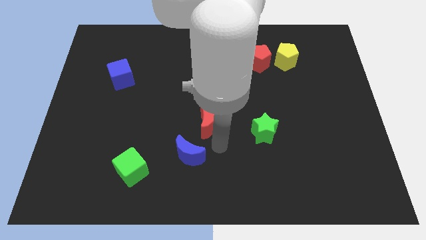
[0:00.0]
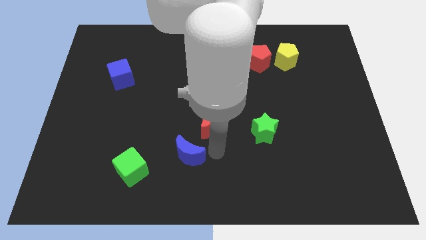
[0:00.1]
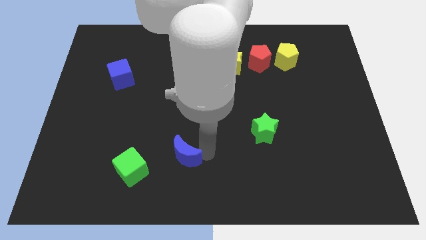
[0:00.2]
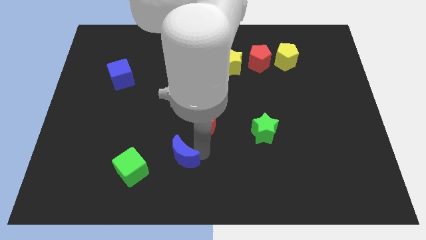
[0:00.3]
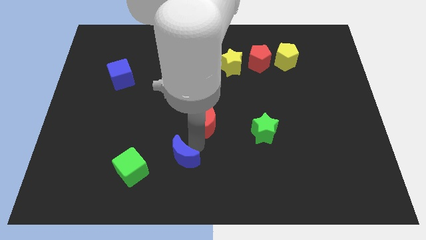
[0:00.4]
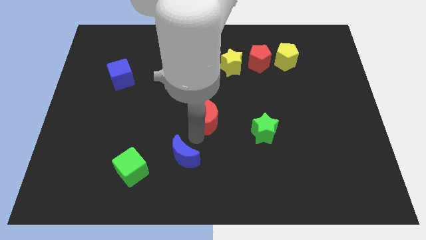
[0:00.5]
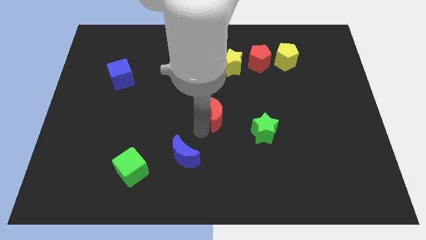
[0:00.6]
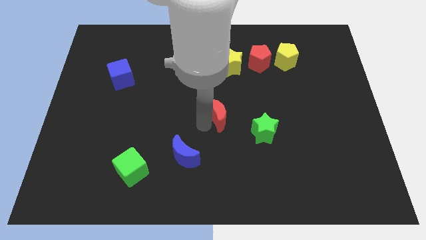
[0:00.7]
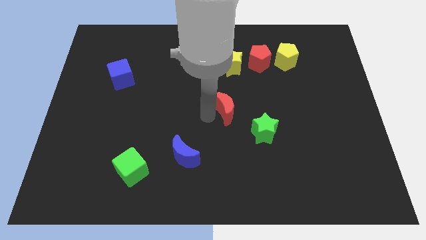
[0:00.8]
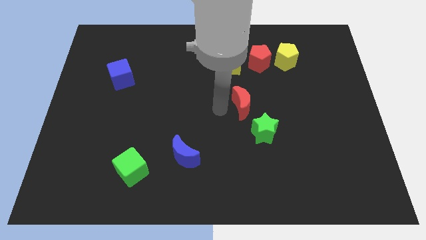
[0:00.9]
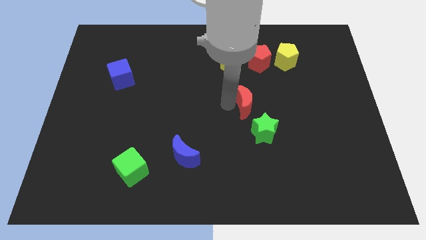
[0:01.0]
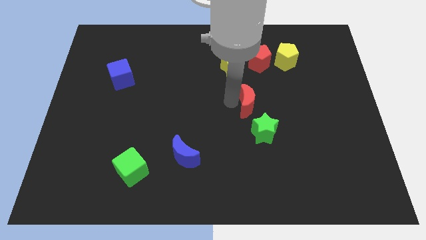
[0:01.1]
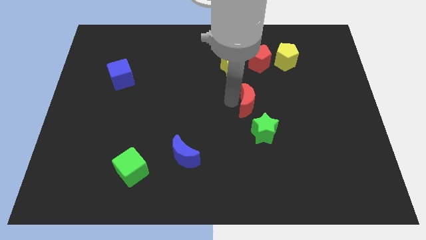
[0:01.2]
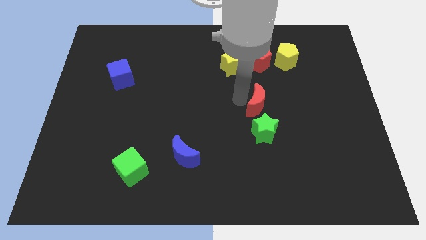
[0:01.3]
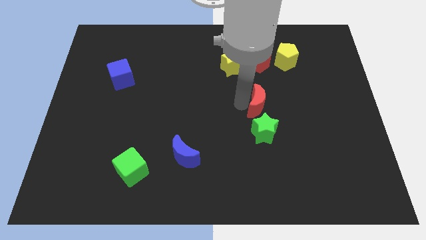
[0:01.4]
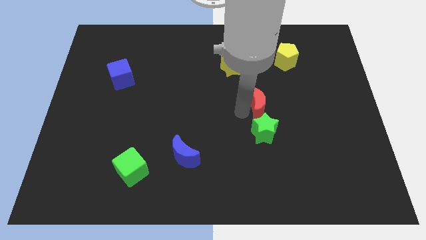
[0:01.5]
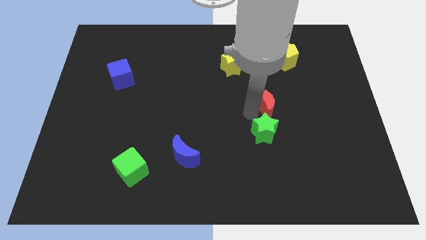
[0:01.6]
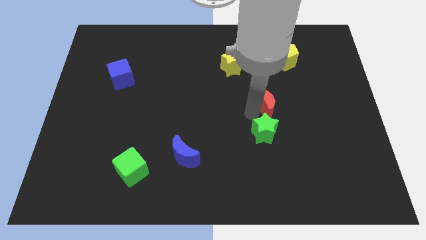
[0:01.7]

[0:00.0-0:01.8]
push red crescent above green star

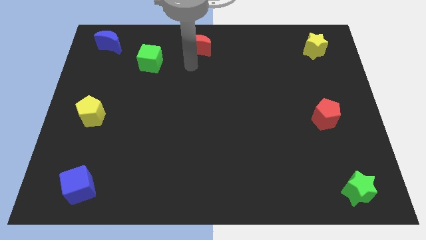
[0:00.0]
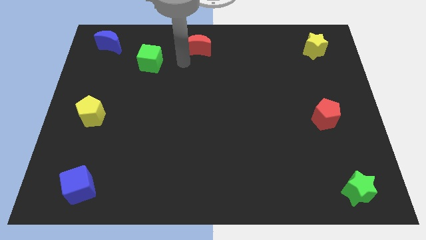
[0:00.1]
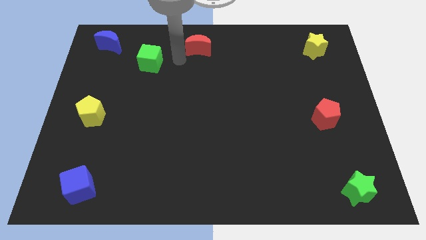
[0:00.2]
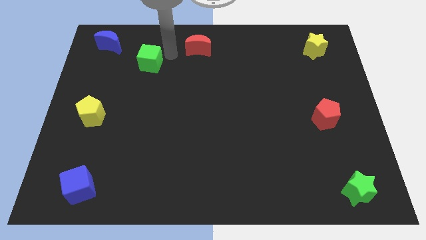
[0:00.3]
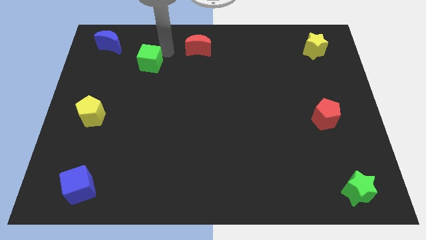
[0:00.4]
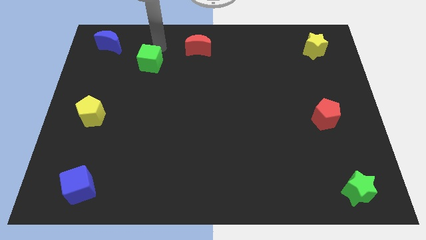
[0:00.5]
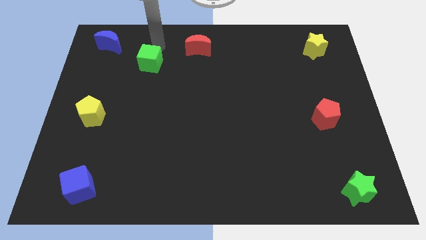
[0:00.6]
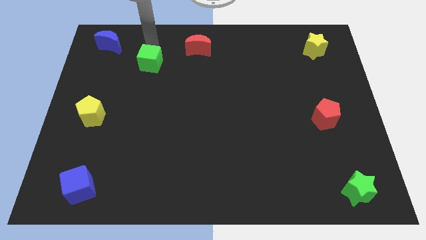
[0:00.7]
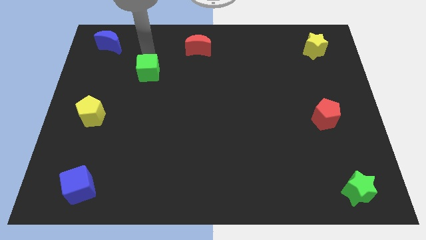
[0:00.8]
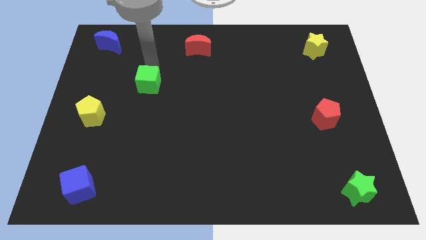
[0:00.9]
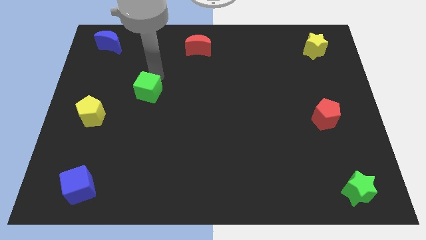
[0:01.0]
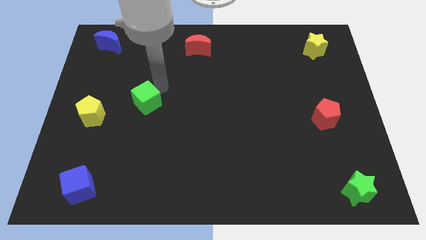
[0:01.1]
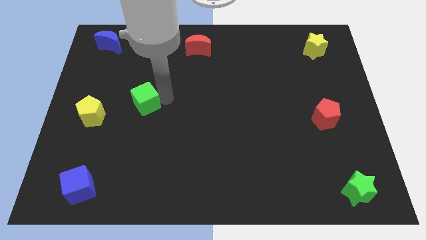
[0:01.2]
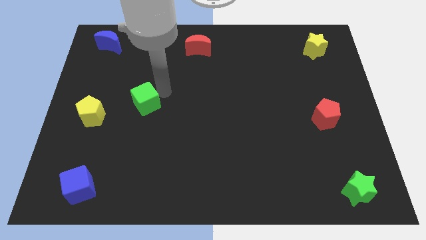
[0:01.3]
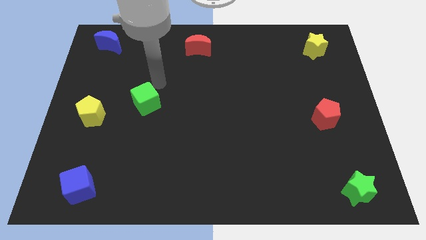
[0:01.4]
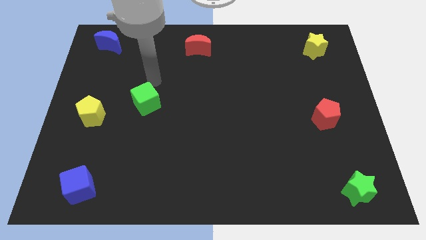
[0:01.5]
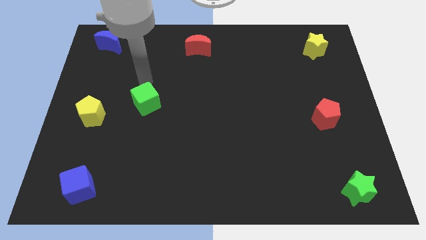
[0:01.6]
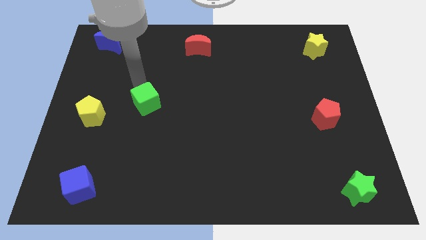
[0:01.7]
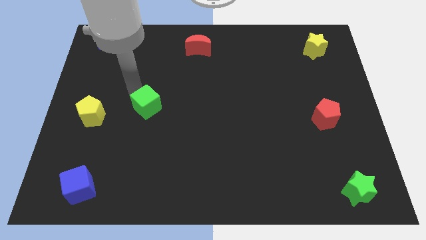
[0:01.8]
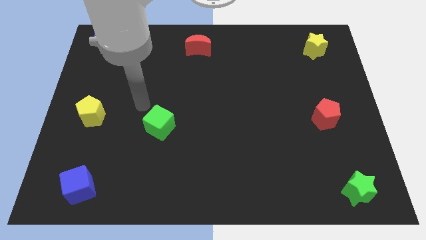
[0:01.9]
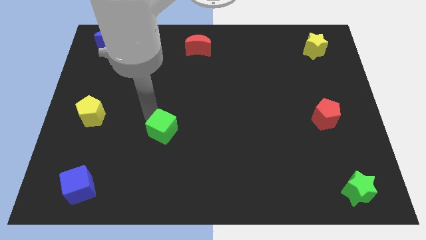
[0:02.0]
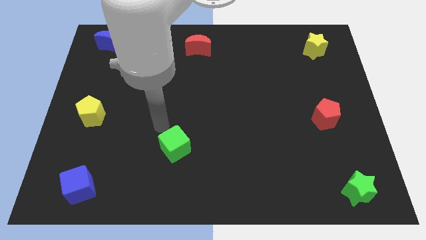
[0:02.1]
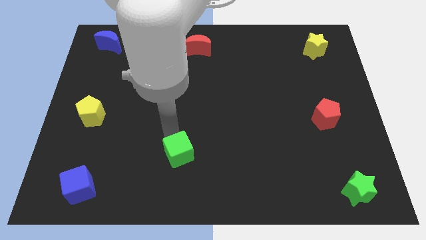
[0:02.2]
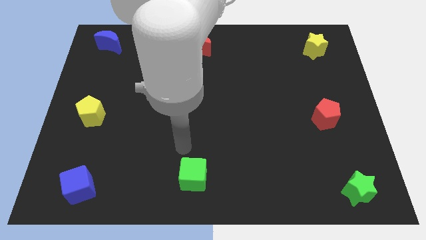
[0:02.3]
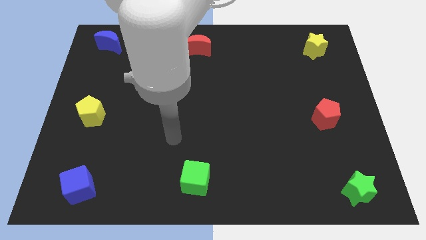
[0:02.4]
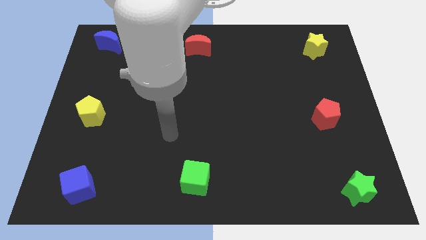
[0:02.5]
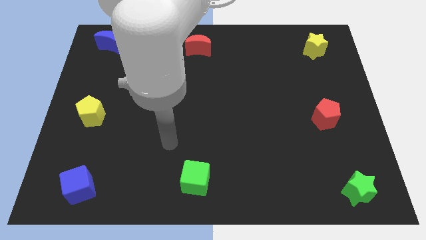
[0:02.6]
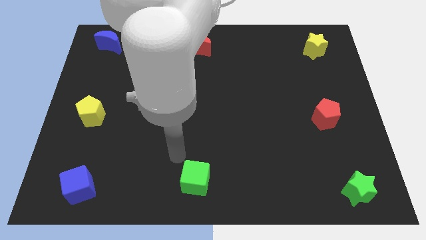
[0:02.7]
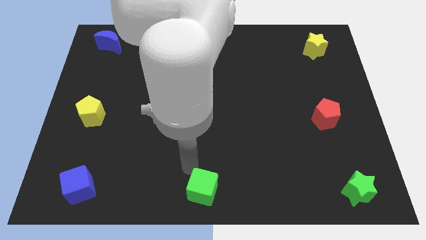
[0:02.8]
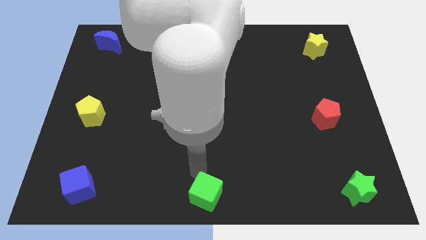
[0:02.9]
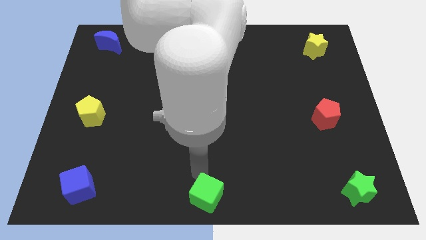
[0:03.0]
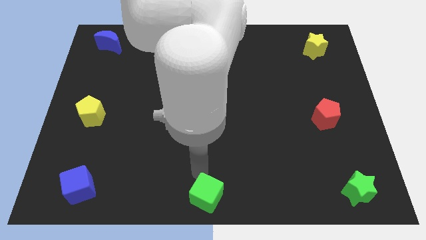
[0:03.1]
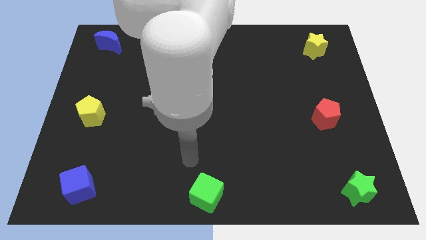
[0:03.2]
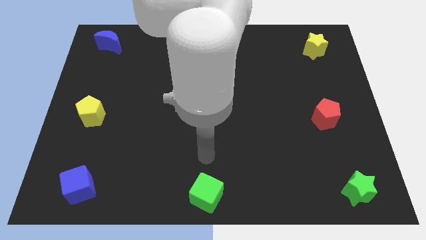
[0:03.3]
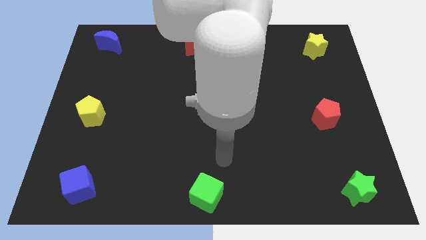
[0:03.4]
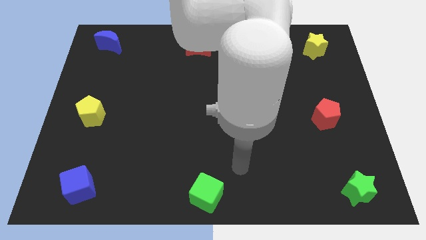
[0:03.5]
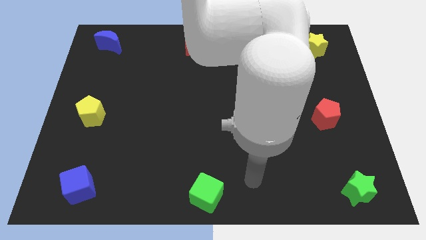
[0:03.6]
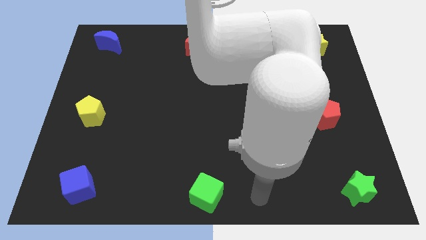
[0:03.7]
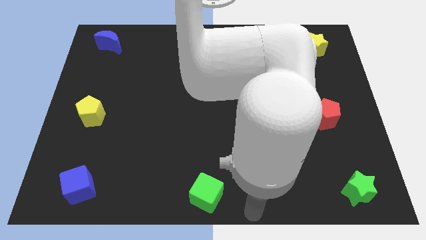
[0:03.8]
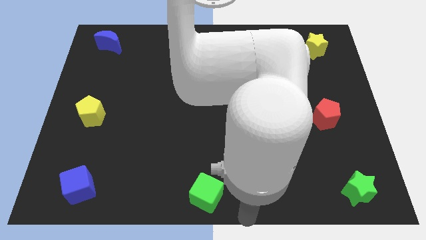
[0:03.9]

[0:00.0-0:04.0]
move the green cube to the bottom center of the board

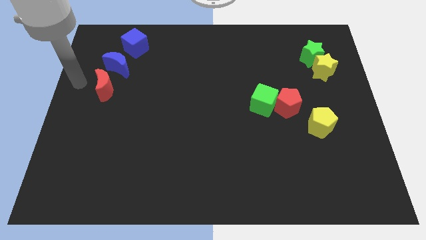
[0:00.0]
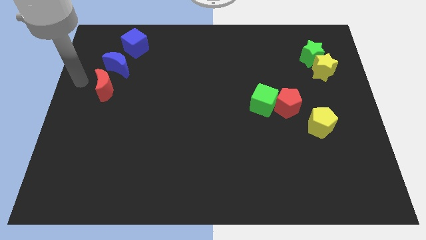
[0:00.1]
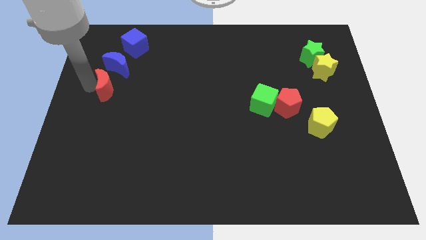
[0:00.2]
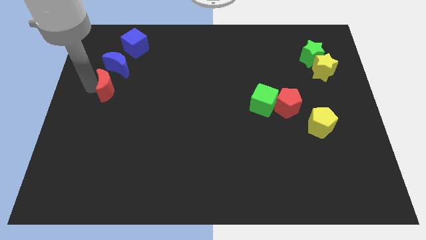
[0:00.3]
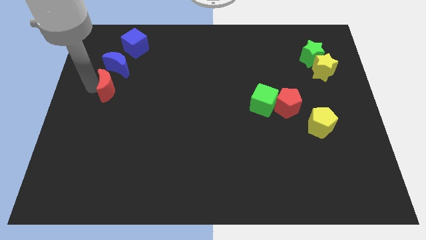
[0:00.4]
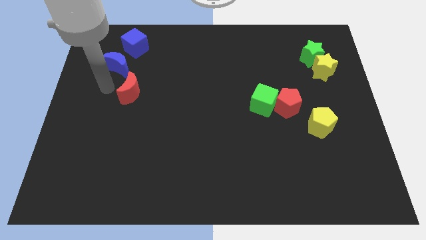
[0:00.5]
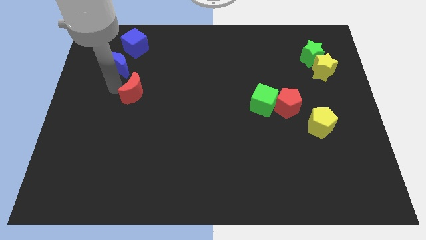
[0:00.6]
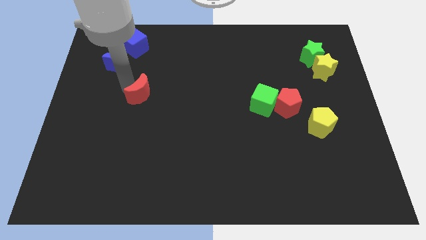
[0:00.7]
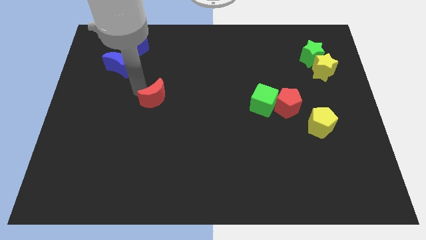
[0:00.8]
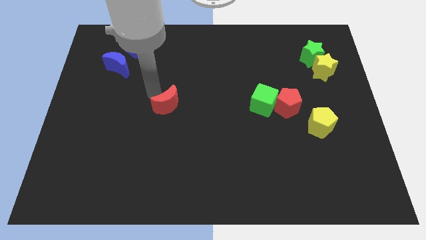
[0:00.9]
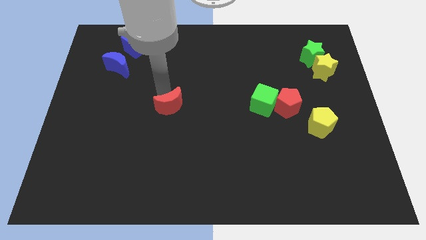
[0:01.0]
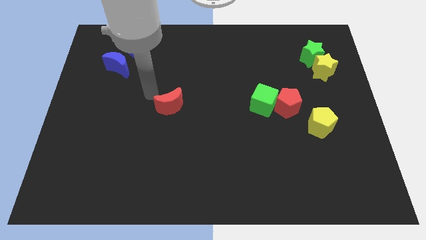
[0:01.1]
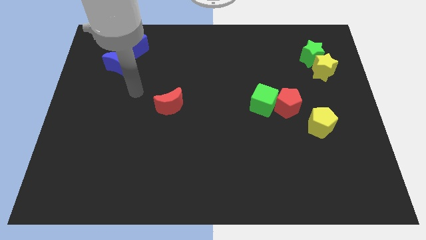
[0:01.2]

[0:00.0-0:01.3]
move the red moon towards the center of the board

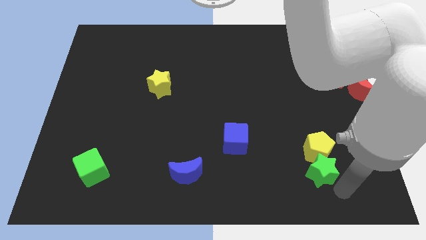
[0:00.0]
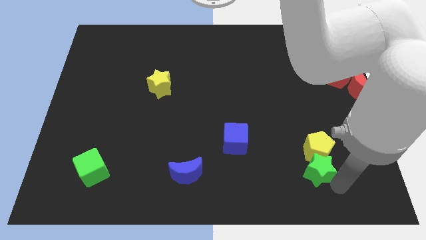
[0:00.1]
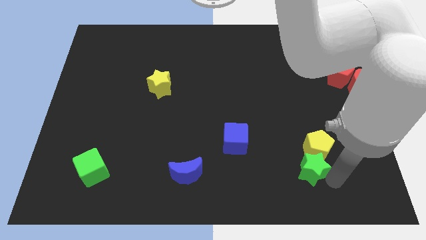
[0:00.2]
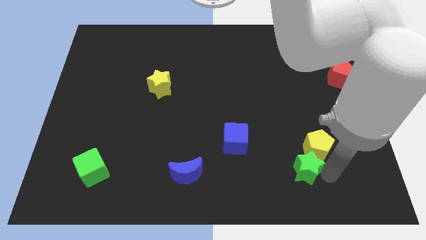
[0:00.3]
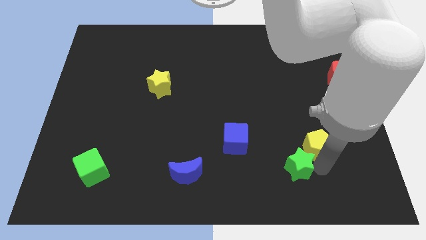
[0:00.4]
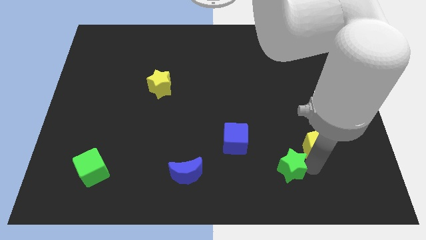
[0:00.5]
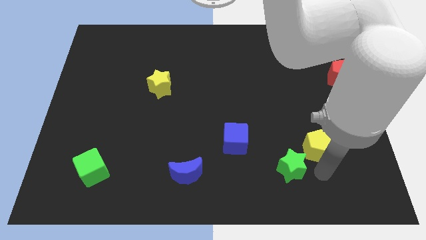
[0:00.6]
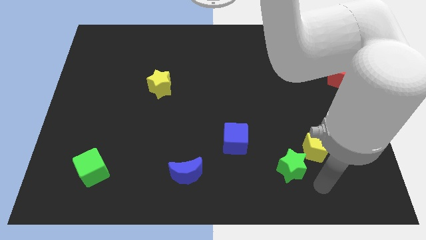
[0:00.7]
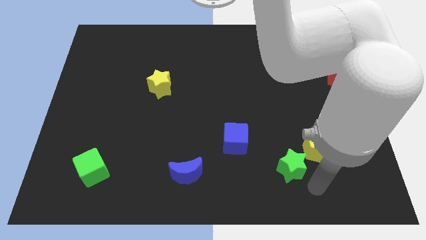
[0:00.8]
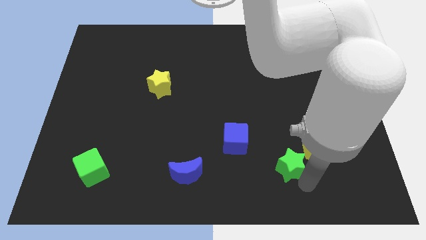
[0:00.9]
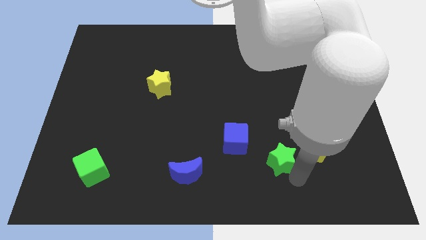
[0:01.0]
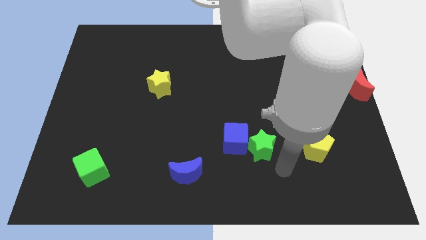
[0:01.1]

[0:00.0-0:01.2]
move the green star to the right of the blue cube

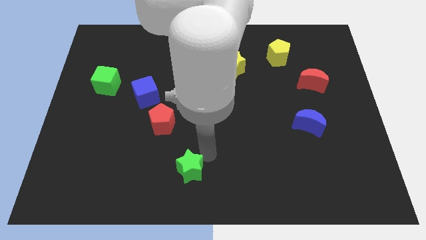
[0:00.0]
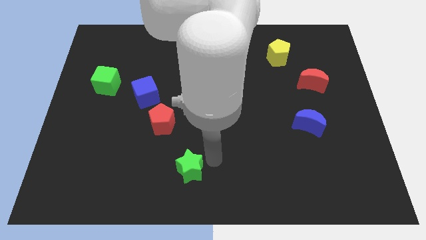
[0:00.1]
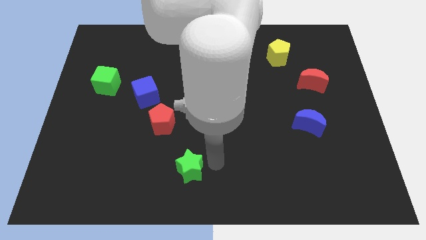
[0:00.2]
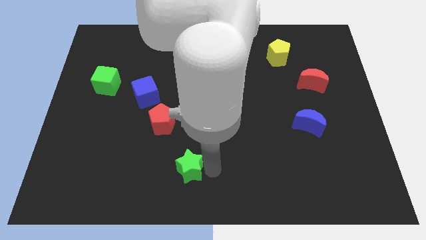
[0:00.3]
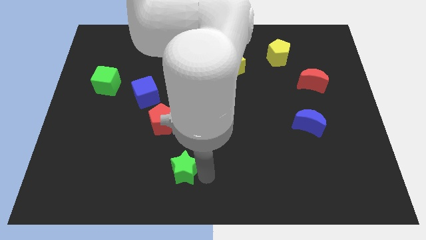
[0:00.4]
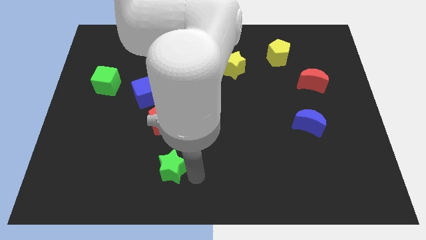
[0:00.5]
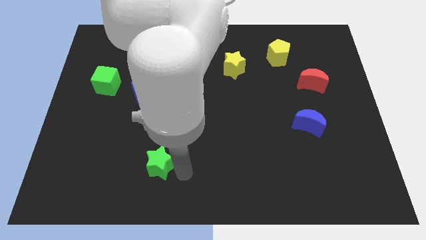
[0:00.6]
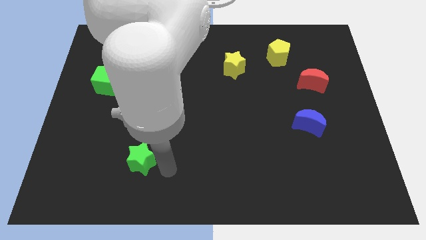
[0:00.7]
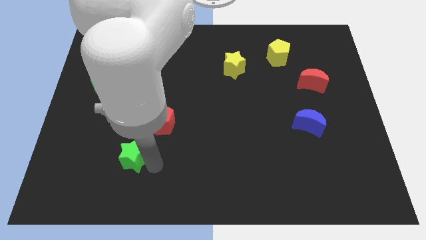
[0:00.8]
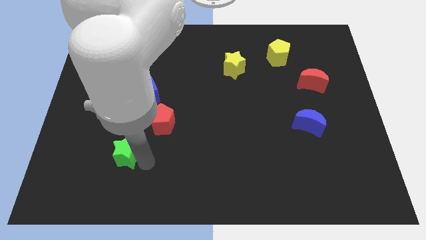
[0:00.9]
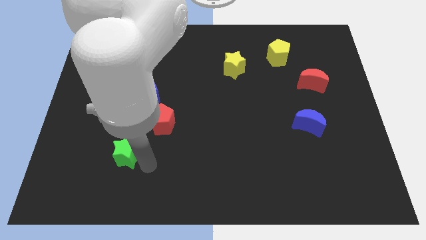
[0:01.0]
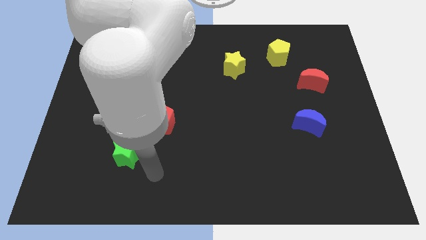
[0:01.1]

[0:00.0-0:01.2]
move the green star diagonally bottom left to the red pentagon
